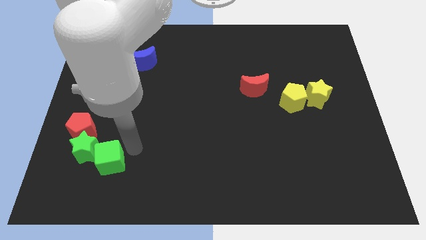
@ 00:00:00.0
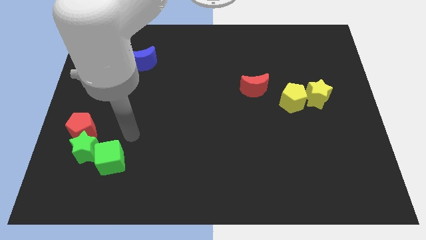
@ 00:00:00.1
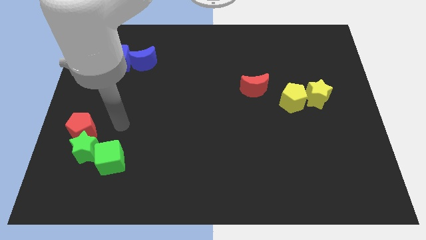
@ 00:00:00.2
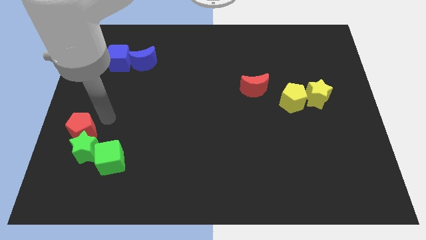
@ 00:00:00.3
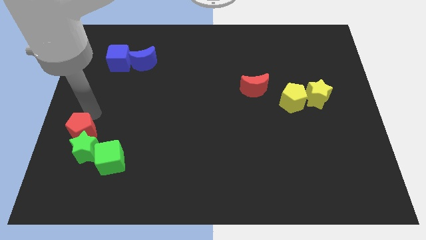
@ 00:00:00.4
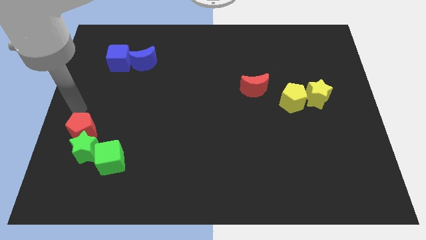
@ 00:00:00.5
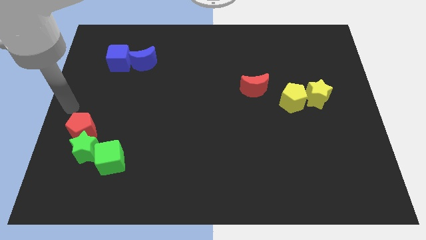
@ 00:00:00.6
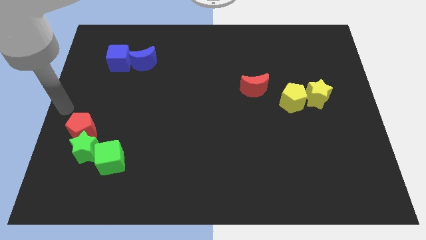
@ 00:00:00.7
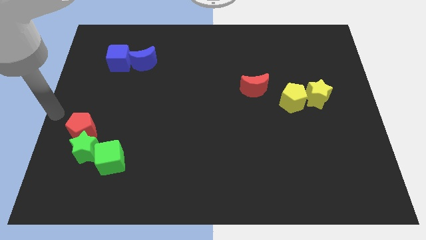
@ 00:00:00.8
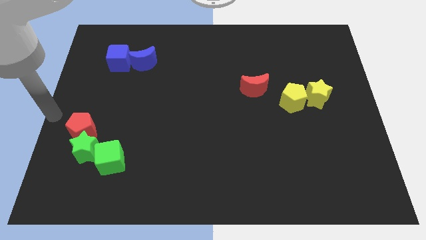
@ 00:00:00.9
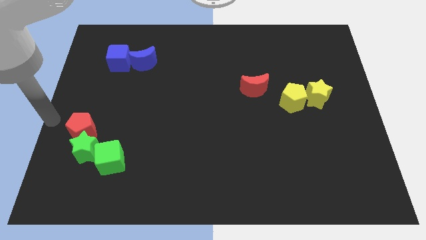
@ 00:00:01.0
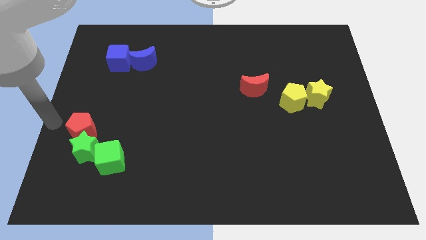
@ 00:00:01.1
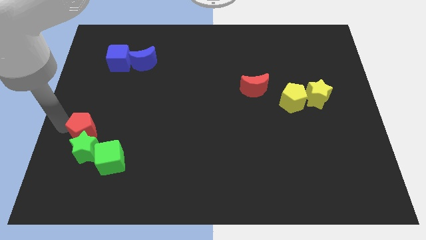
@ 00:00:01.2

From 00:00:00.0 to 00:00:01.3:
point your arm at the left of the red pentagon

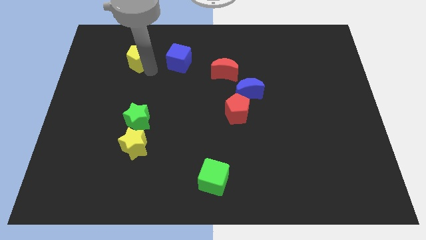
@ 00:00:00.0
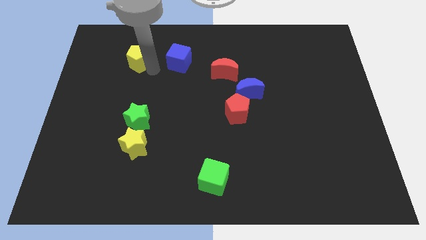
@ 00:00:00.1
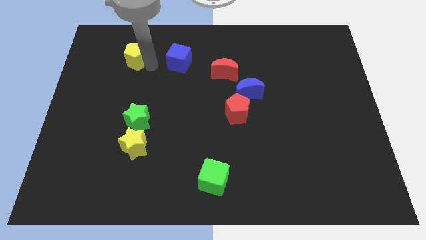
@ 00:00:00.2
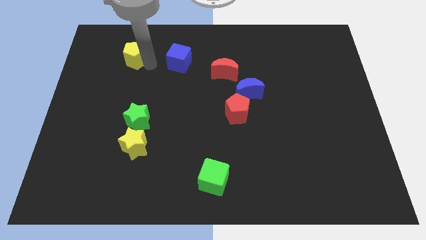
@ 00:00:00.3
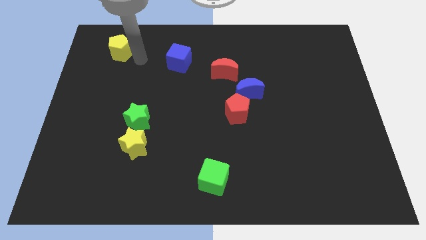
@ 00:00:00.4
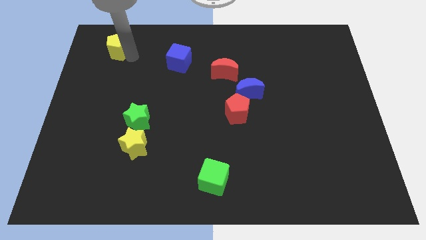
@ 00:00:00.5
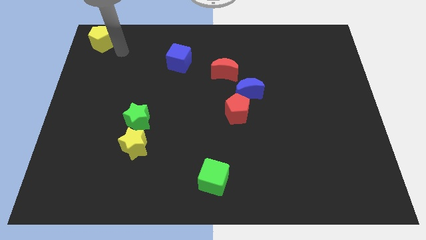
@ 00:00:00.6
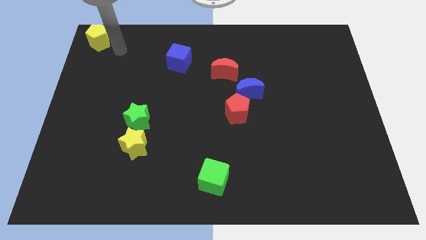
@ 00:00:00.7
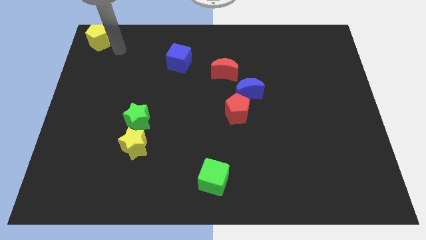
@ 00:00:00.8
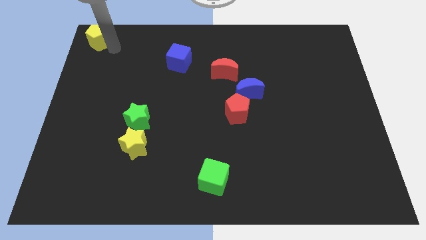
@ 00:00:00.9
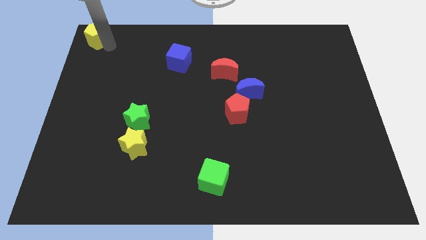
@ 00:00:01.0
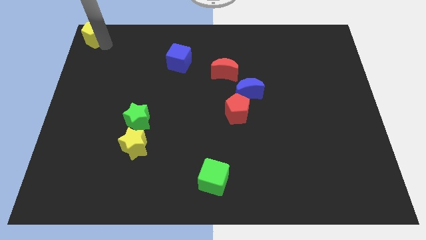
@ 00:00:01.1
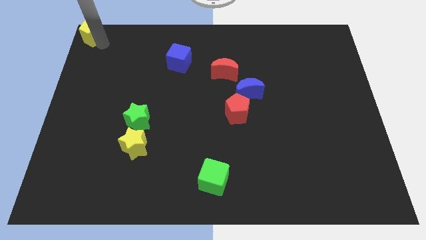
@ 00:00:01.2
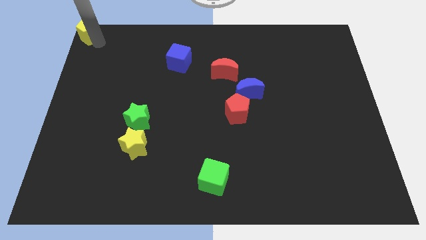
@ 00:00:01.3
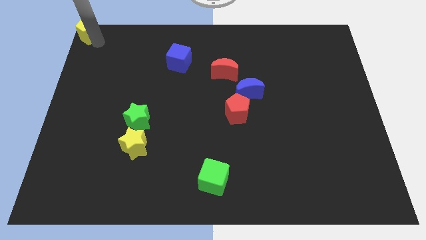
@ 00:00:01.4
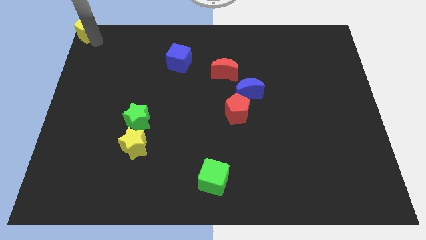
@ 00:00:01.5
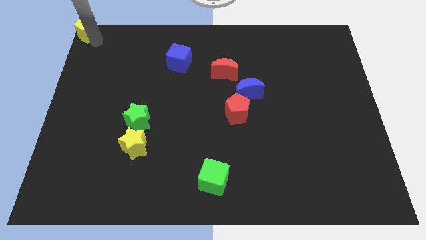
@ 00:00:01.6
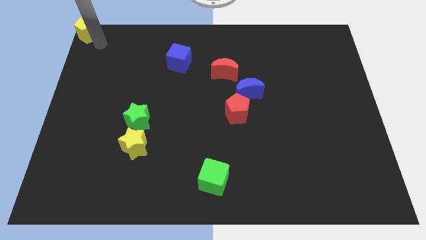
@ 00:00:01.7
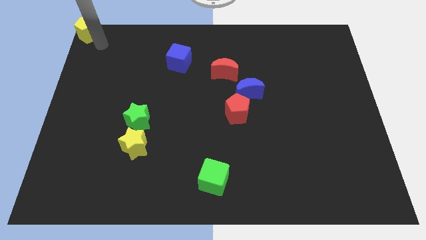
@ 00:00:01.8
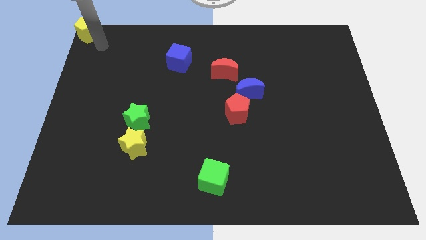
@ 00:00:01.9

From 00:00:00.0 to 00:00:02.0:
place yellow pentagon towards top left corner

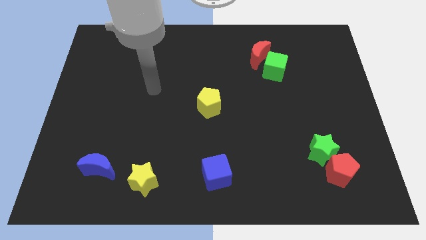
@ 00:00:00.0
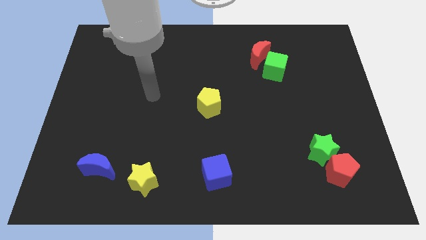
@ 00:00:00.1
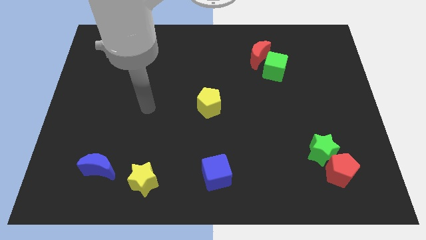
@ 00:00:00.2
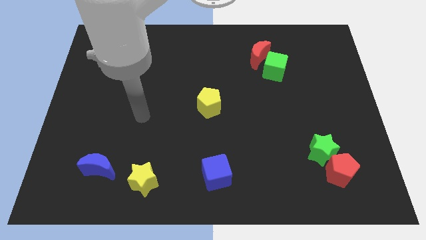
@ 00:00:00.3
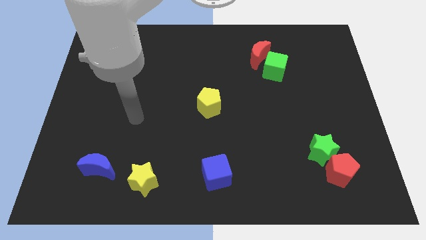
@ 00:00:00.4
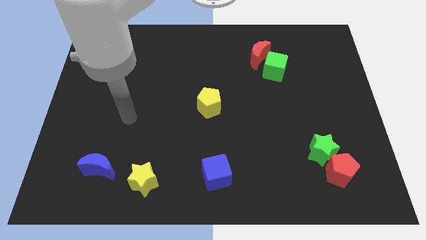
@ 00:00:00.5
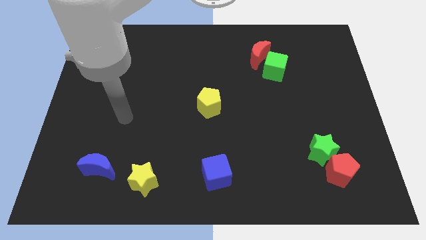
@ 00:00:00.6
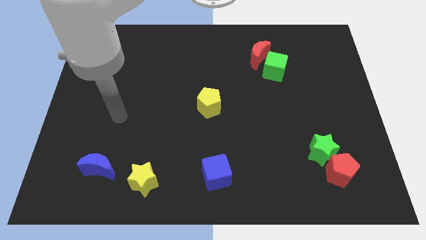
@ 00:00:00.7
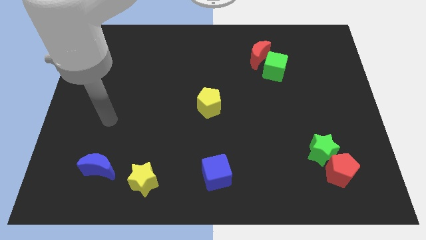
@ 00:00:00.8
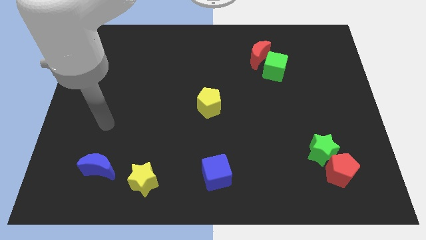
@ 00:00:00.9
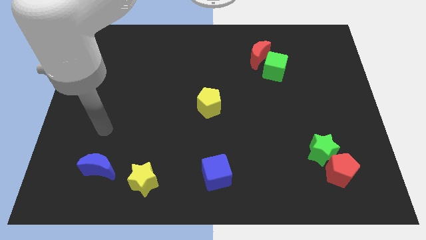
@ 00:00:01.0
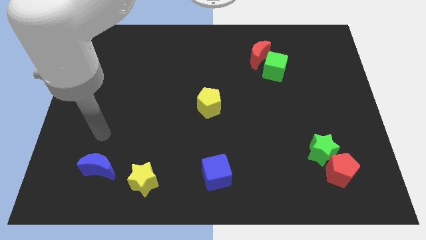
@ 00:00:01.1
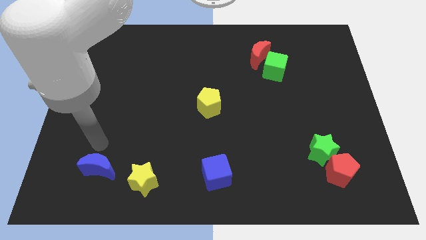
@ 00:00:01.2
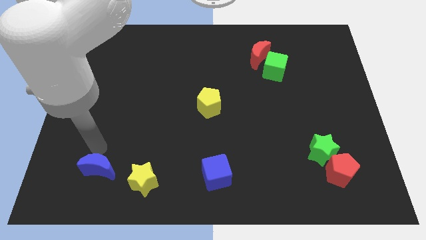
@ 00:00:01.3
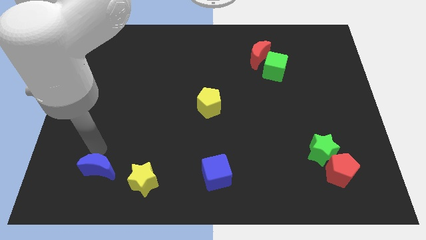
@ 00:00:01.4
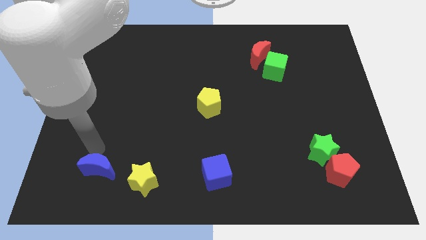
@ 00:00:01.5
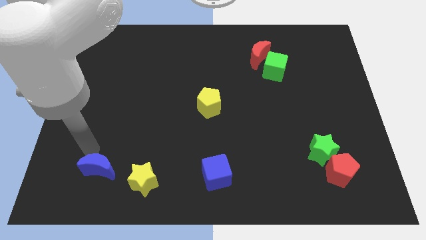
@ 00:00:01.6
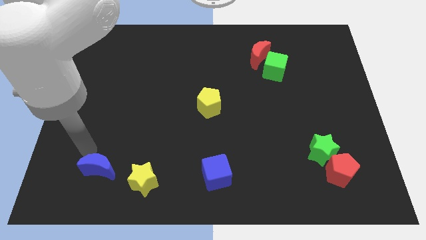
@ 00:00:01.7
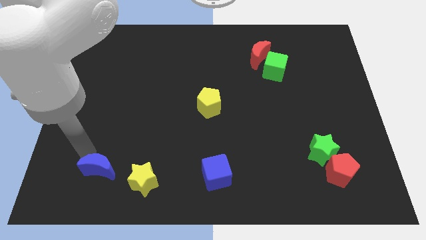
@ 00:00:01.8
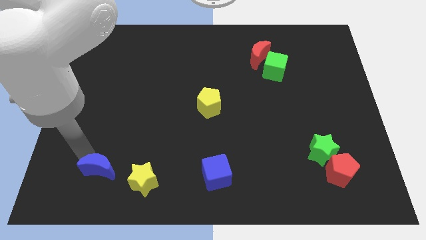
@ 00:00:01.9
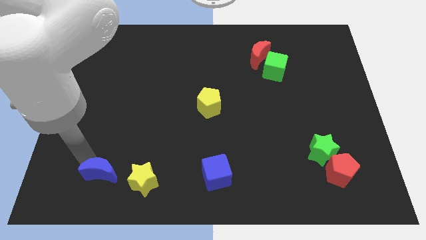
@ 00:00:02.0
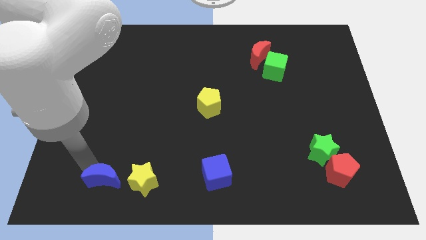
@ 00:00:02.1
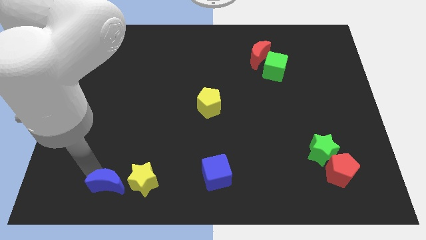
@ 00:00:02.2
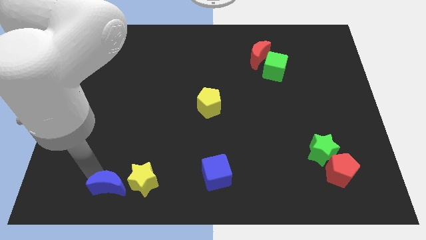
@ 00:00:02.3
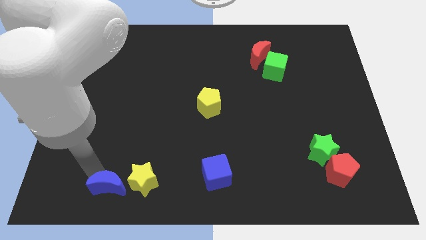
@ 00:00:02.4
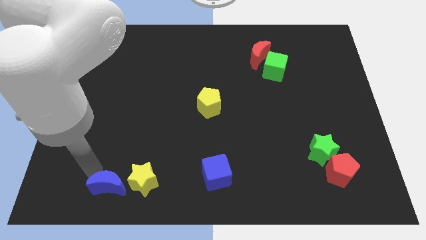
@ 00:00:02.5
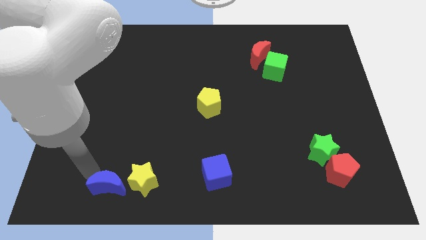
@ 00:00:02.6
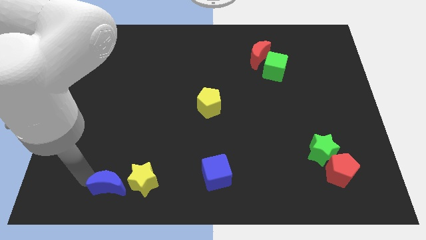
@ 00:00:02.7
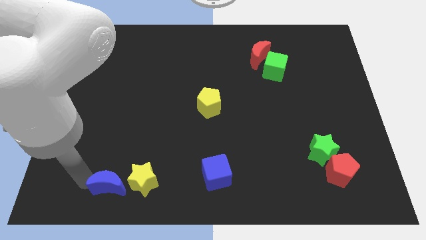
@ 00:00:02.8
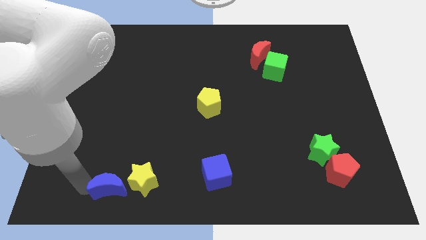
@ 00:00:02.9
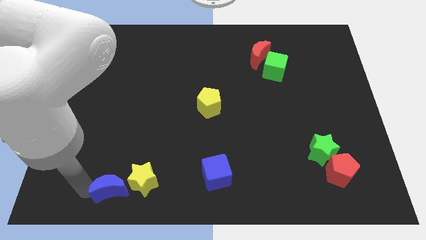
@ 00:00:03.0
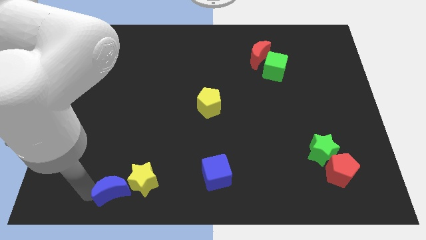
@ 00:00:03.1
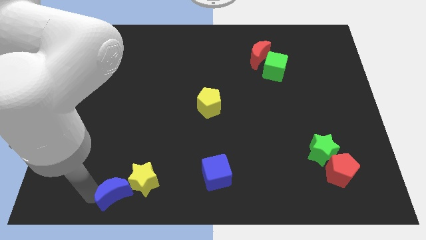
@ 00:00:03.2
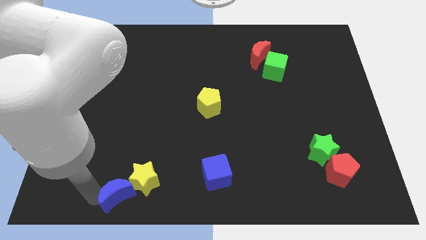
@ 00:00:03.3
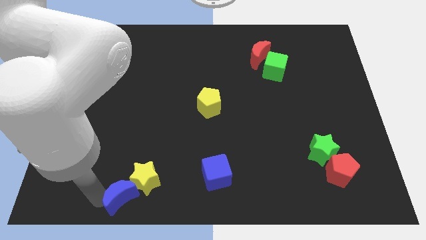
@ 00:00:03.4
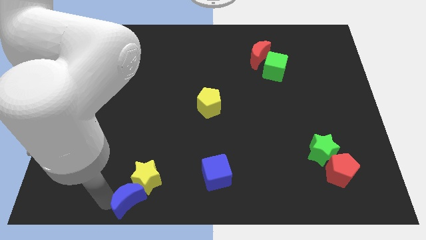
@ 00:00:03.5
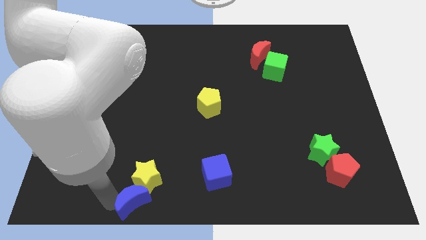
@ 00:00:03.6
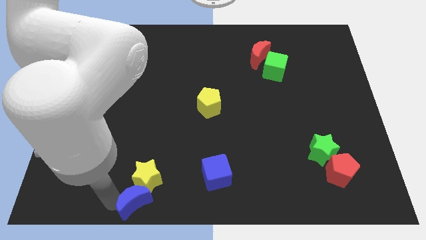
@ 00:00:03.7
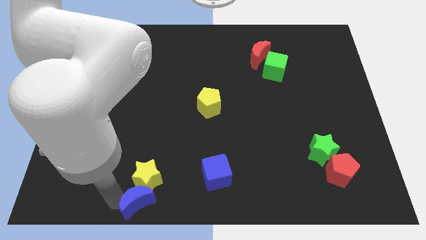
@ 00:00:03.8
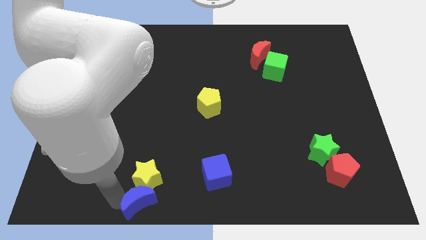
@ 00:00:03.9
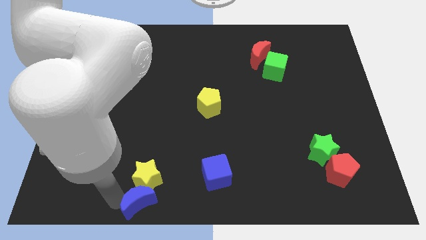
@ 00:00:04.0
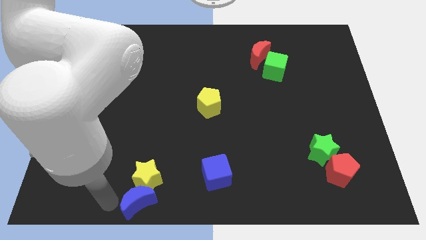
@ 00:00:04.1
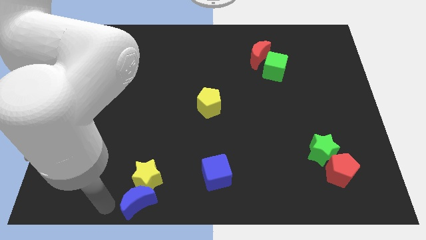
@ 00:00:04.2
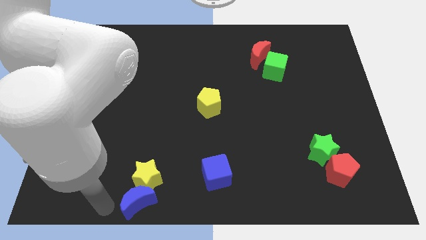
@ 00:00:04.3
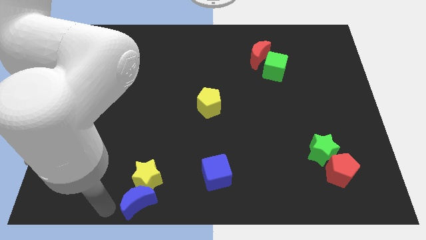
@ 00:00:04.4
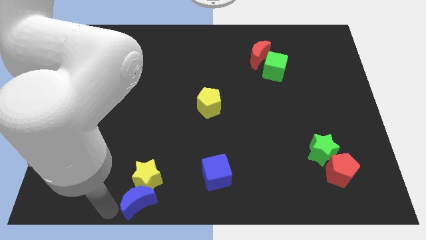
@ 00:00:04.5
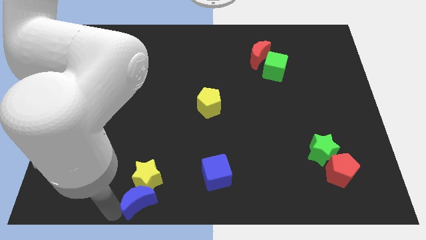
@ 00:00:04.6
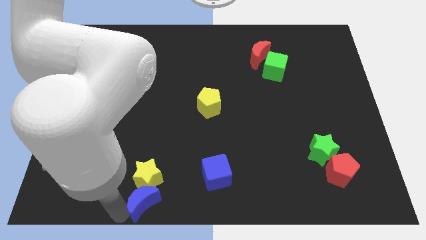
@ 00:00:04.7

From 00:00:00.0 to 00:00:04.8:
move the blue crescent to the bottom side of the yellow star

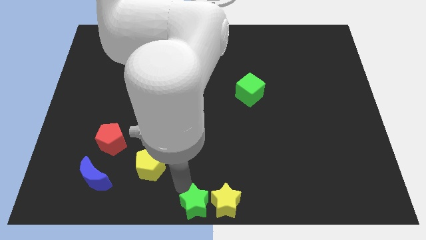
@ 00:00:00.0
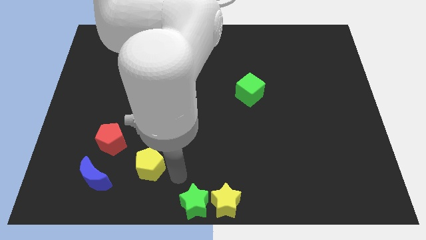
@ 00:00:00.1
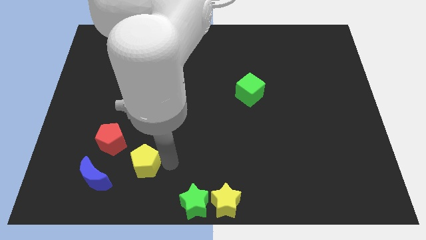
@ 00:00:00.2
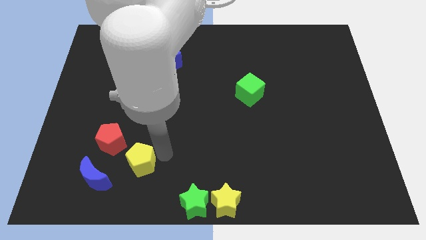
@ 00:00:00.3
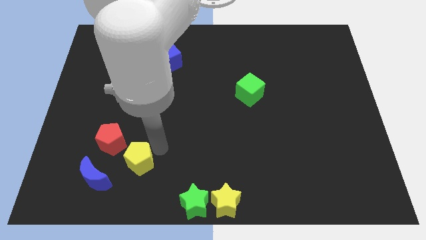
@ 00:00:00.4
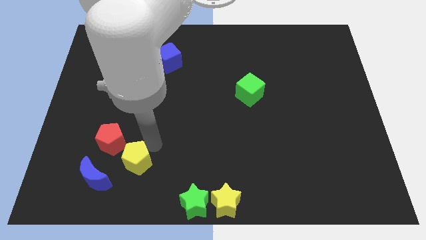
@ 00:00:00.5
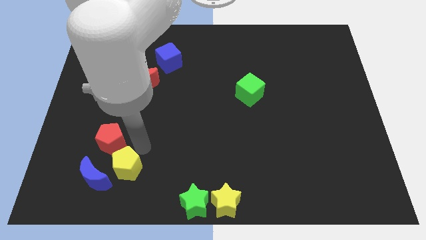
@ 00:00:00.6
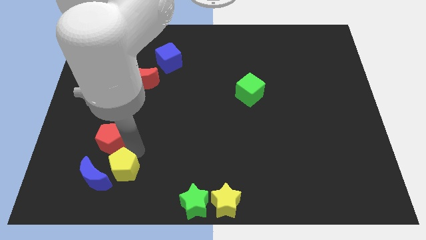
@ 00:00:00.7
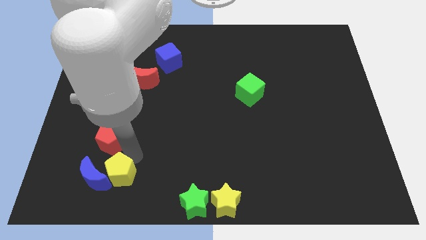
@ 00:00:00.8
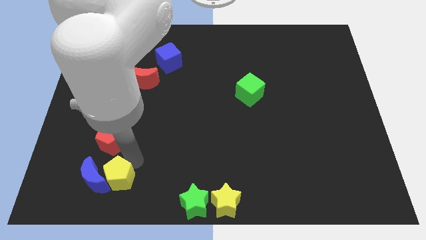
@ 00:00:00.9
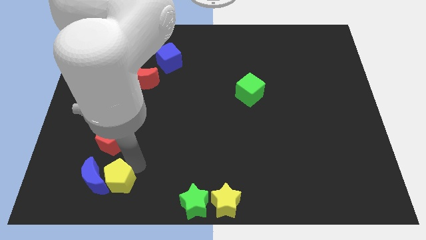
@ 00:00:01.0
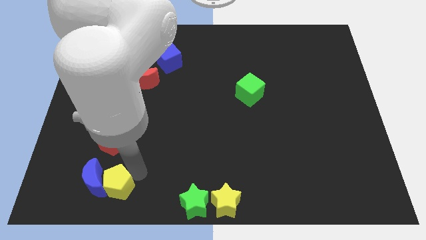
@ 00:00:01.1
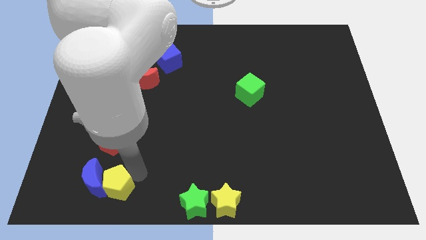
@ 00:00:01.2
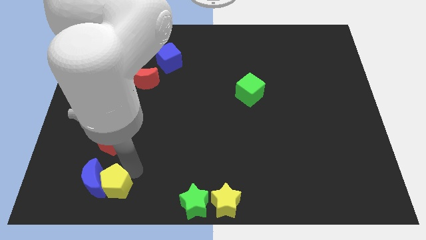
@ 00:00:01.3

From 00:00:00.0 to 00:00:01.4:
push the yellow pentagon into the blue moon
